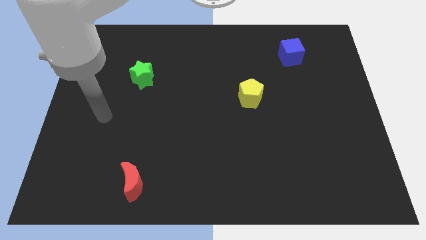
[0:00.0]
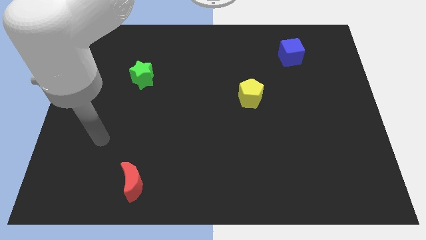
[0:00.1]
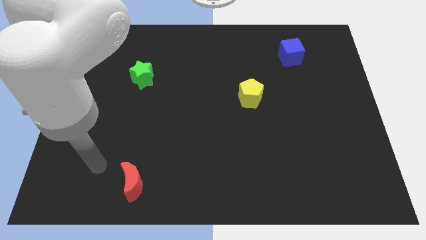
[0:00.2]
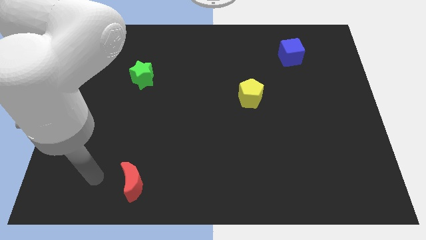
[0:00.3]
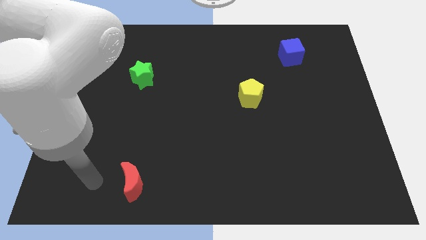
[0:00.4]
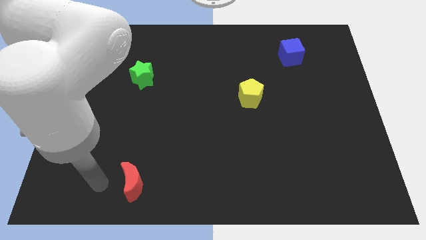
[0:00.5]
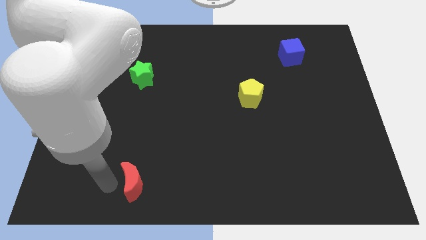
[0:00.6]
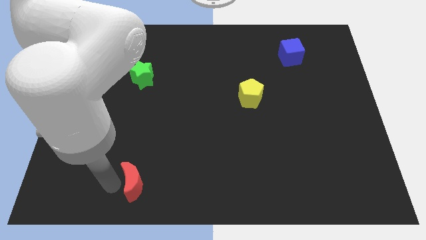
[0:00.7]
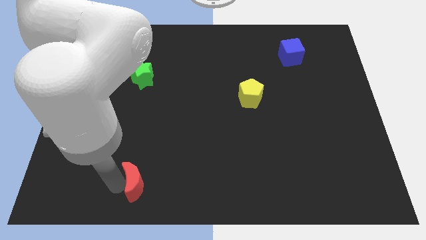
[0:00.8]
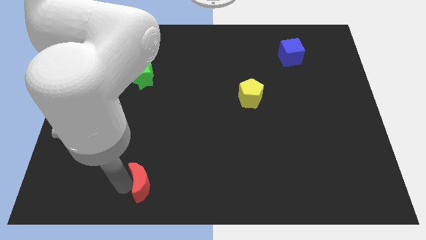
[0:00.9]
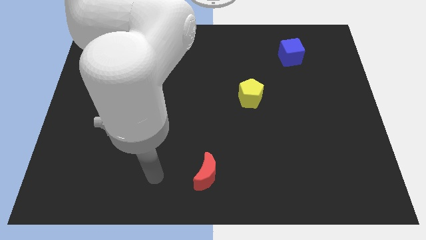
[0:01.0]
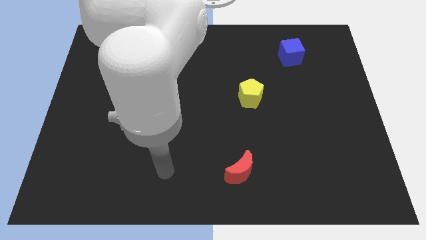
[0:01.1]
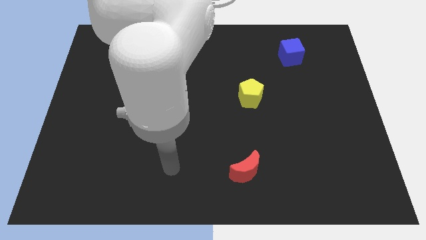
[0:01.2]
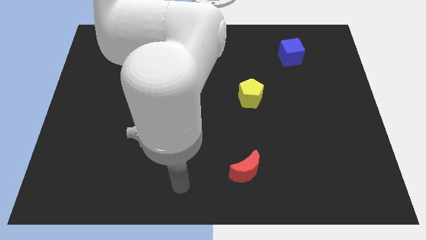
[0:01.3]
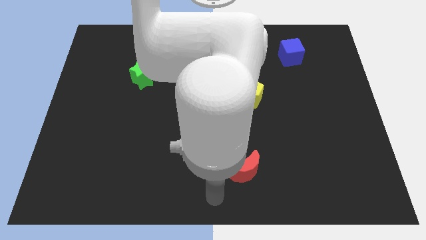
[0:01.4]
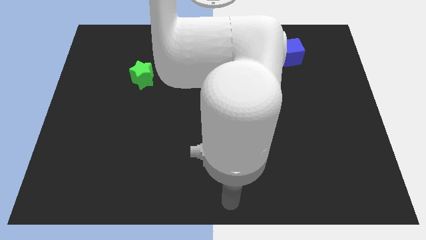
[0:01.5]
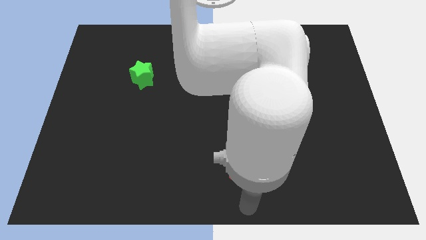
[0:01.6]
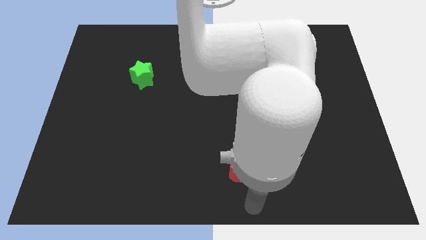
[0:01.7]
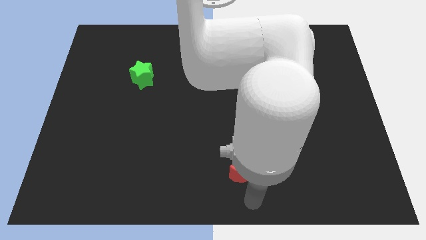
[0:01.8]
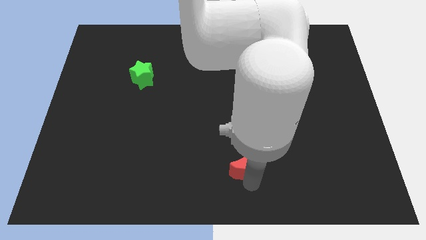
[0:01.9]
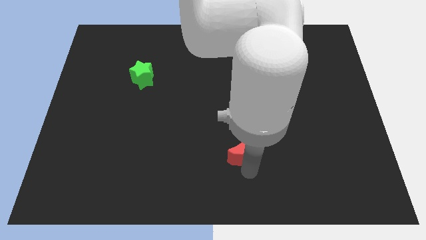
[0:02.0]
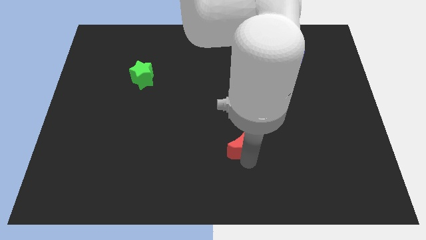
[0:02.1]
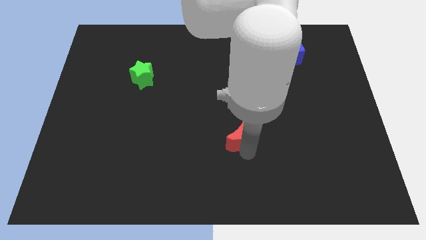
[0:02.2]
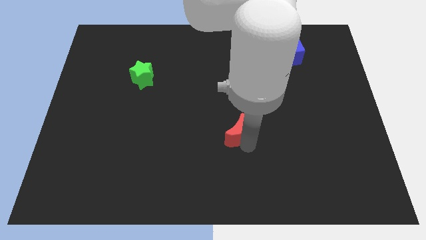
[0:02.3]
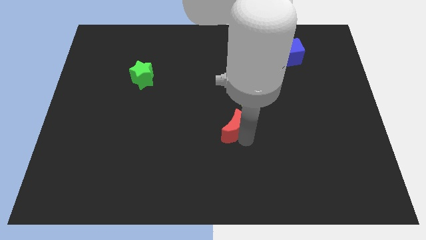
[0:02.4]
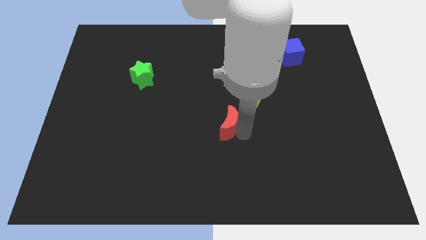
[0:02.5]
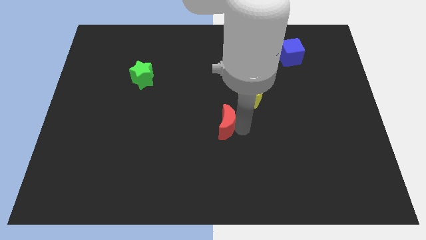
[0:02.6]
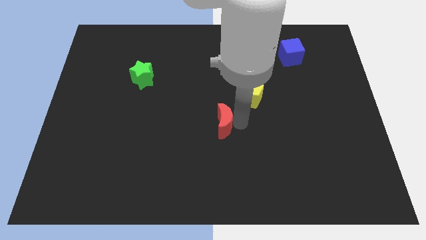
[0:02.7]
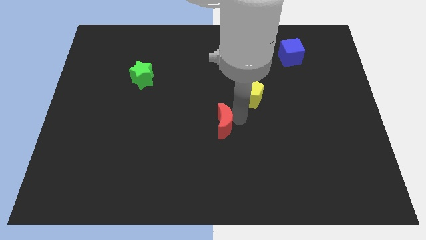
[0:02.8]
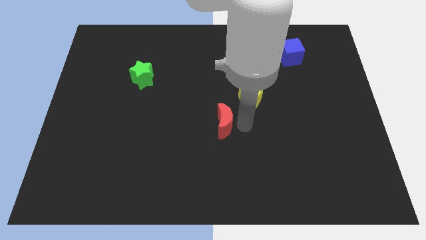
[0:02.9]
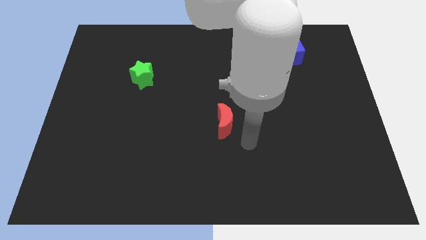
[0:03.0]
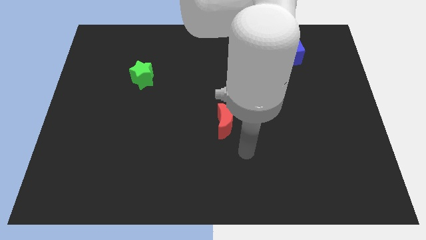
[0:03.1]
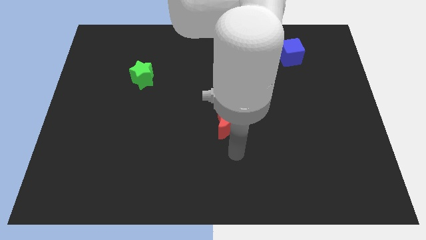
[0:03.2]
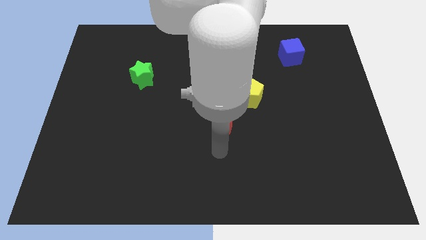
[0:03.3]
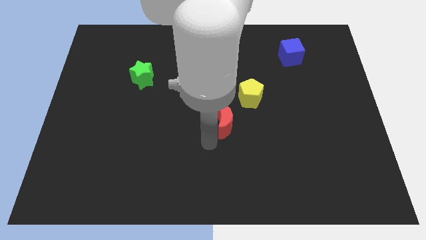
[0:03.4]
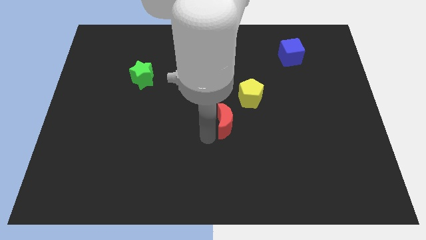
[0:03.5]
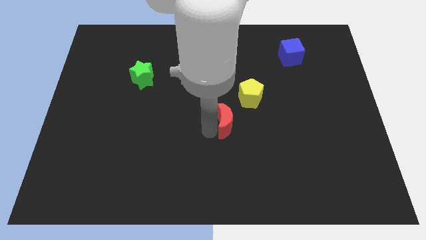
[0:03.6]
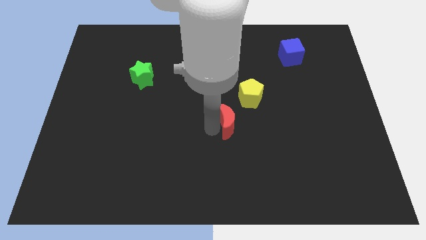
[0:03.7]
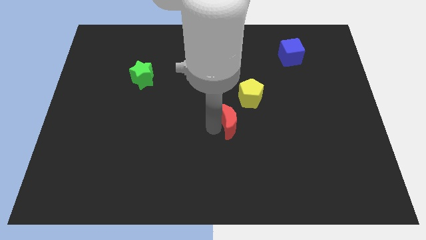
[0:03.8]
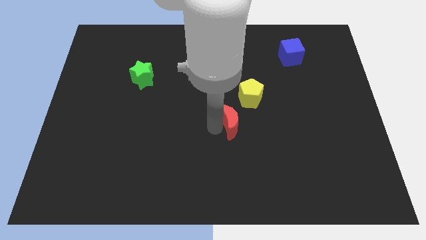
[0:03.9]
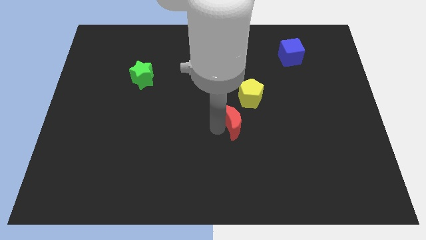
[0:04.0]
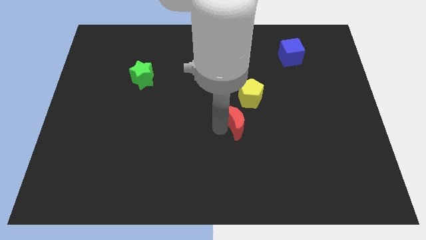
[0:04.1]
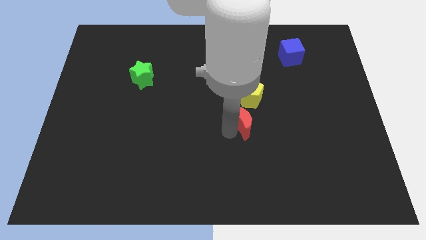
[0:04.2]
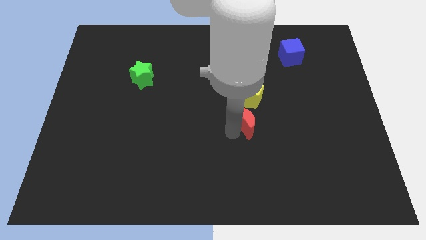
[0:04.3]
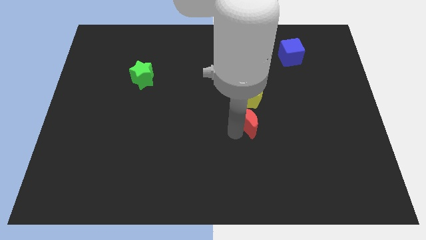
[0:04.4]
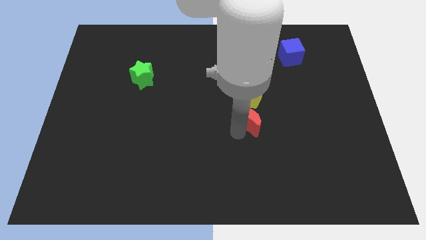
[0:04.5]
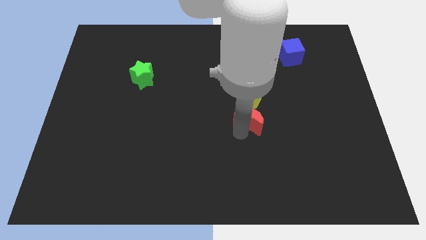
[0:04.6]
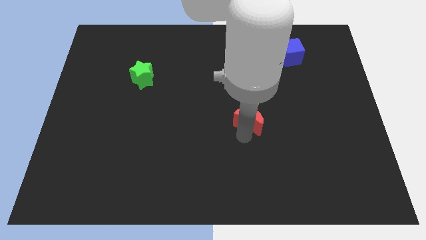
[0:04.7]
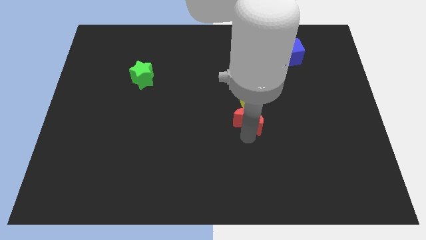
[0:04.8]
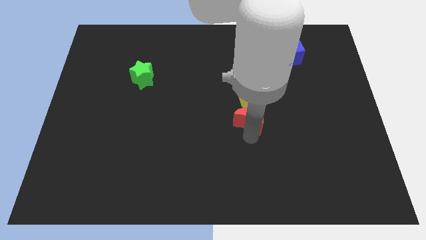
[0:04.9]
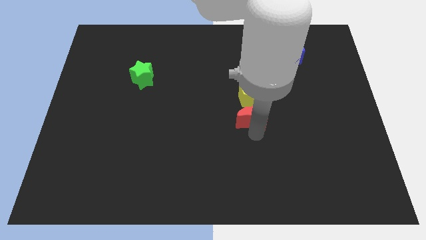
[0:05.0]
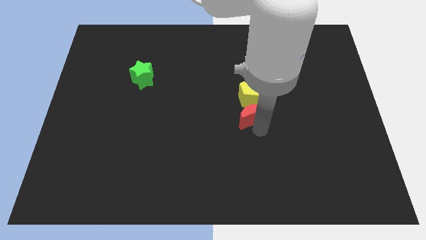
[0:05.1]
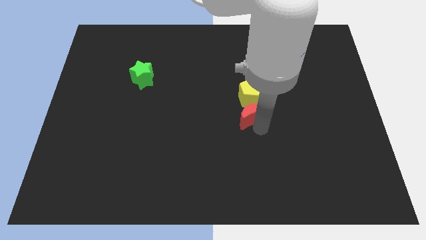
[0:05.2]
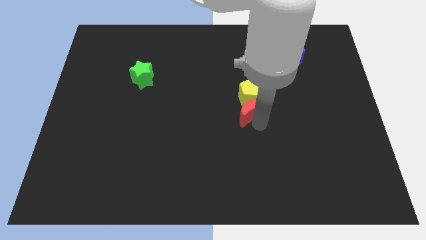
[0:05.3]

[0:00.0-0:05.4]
slide the moon towards the yellow block

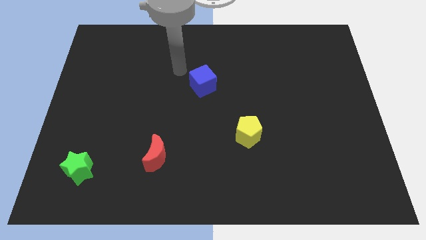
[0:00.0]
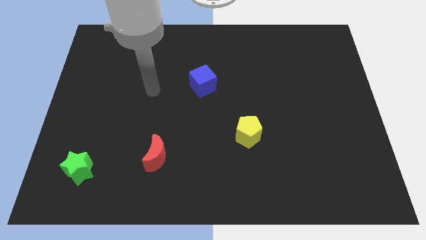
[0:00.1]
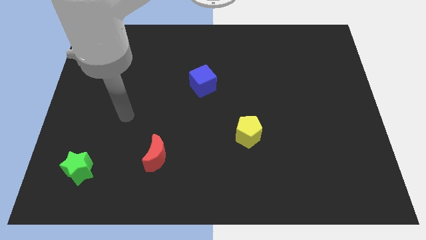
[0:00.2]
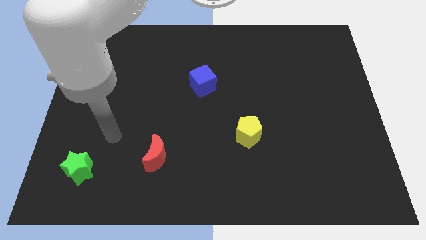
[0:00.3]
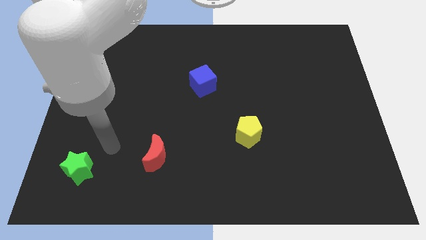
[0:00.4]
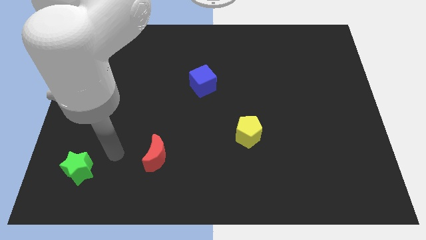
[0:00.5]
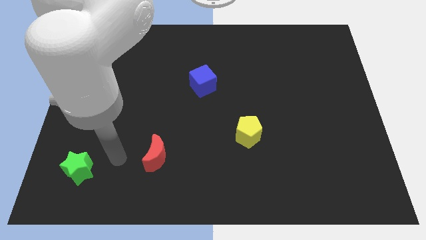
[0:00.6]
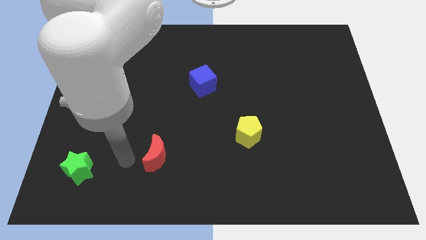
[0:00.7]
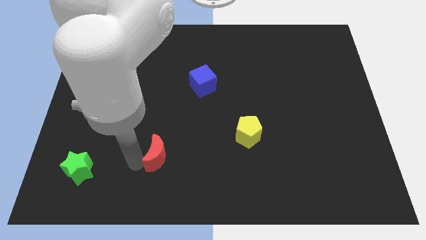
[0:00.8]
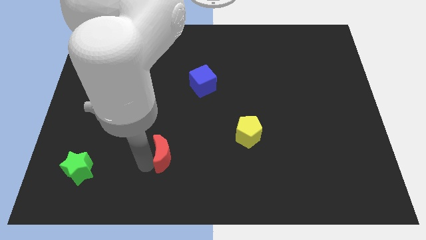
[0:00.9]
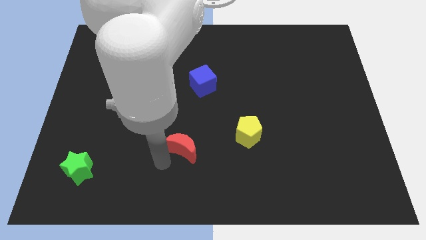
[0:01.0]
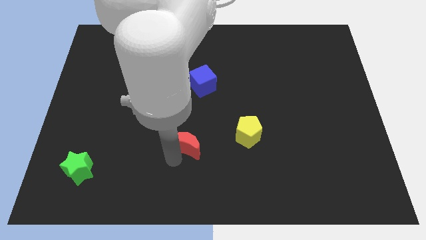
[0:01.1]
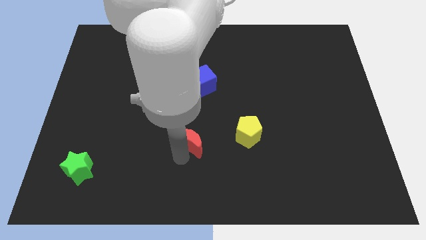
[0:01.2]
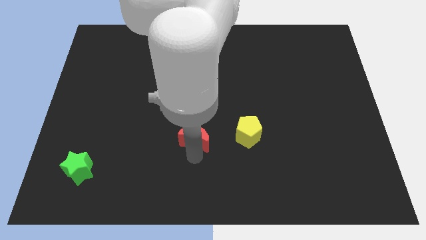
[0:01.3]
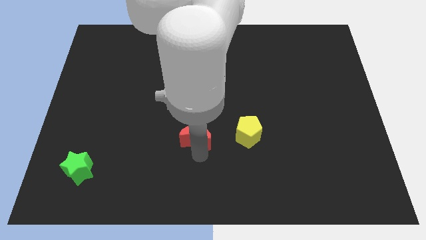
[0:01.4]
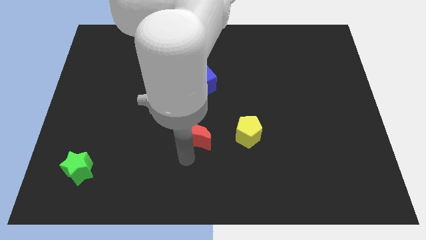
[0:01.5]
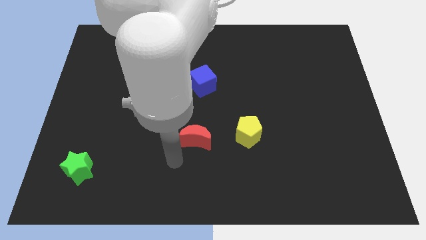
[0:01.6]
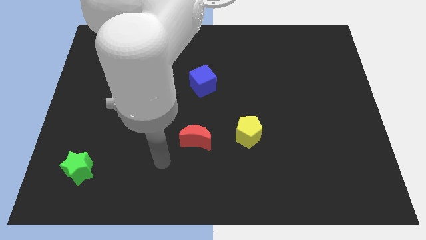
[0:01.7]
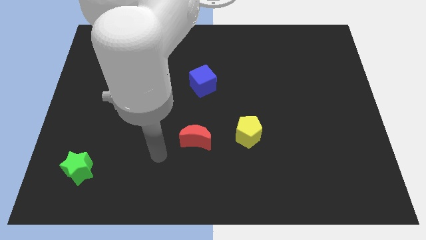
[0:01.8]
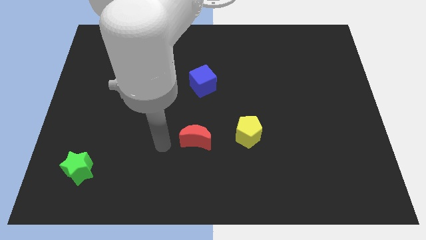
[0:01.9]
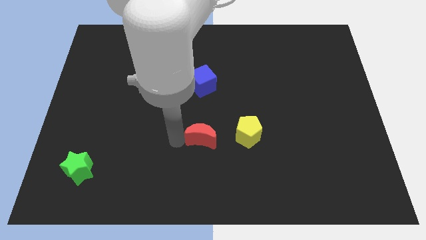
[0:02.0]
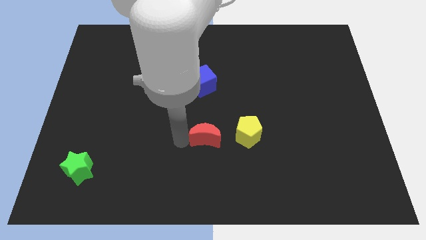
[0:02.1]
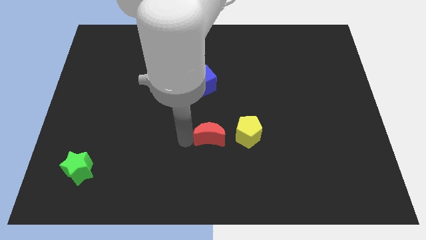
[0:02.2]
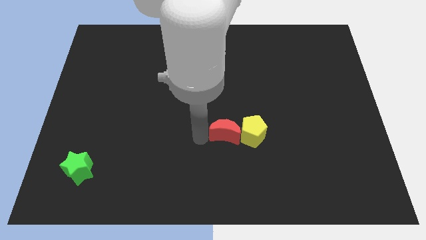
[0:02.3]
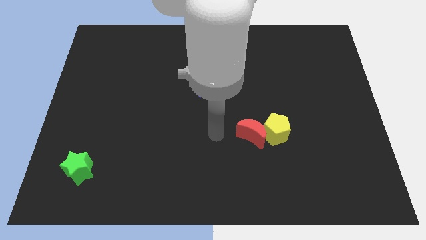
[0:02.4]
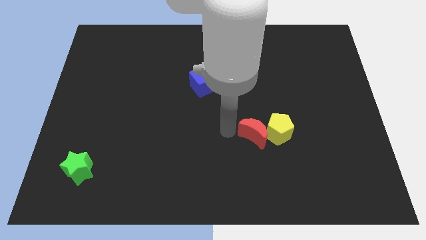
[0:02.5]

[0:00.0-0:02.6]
slide the moon towards the pentagon

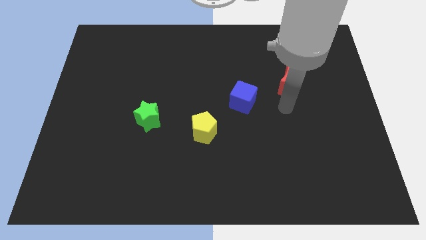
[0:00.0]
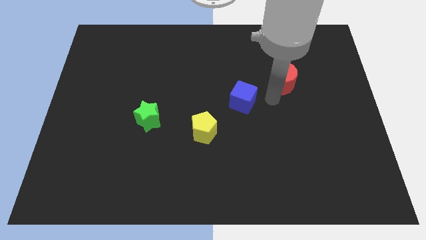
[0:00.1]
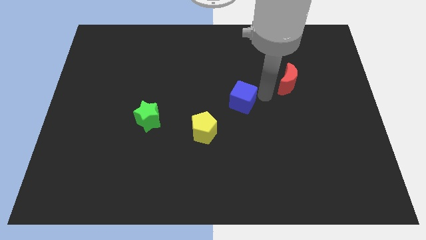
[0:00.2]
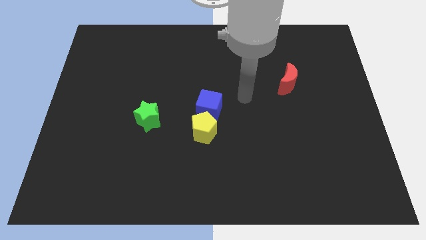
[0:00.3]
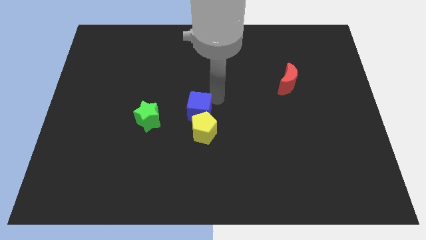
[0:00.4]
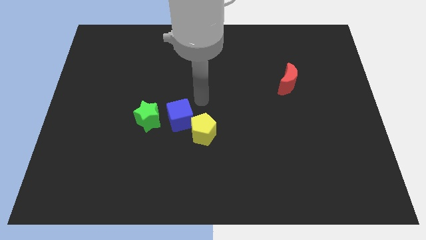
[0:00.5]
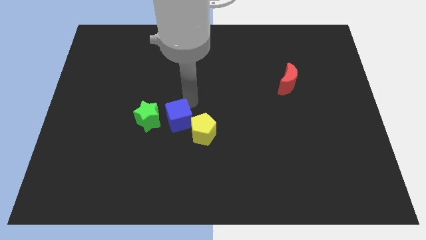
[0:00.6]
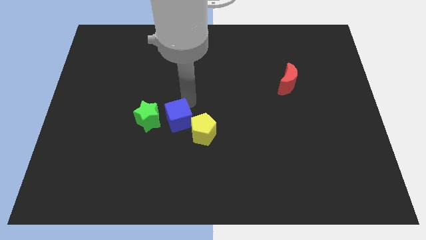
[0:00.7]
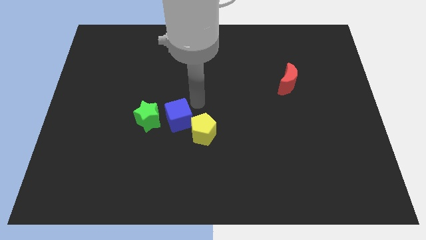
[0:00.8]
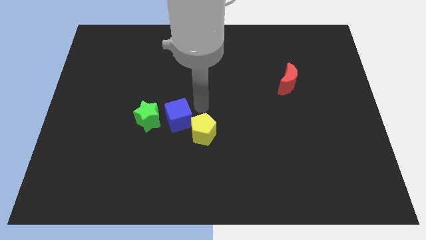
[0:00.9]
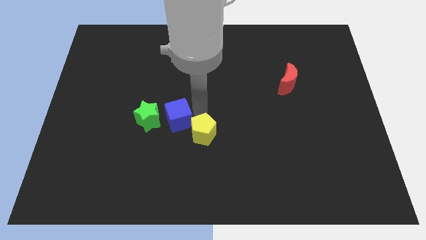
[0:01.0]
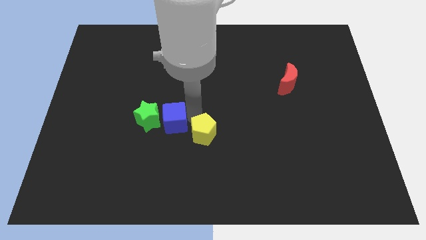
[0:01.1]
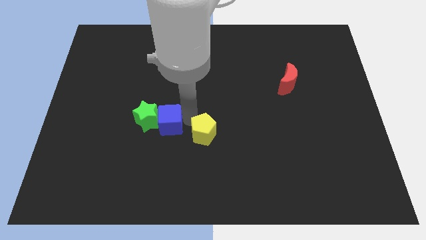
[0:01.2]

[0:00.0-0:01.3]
slide the blue cube close to the star
